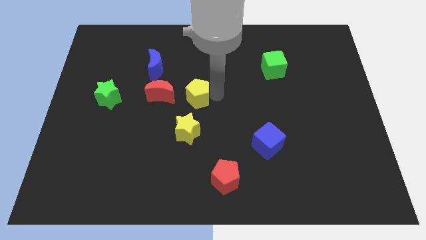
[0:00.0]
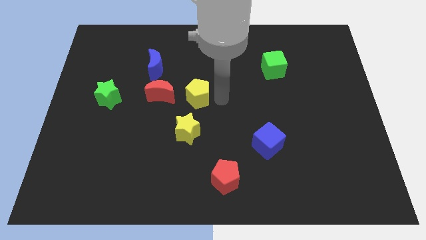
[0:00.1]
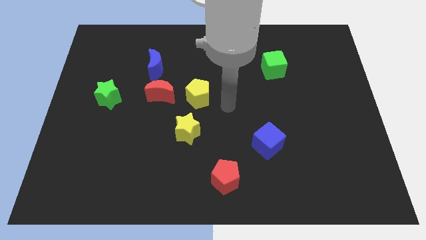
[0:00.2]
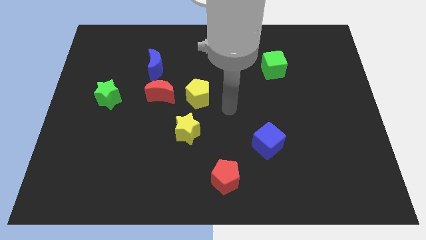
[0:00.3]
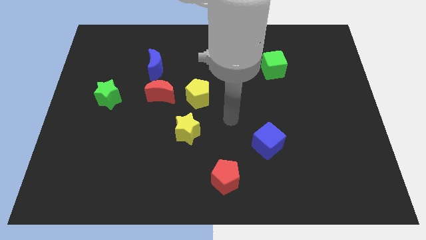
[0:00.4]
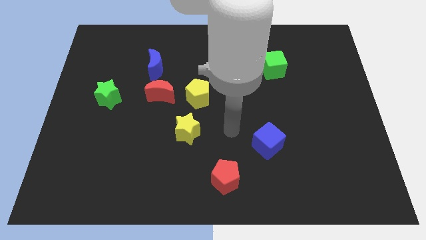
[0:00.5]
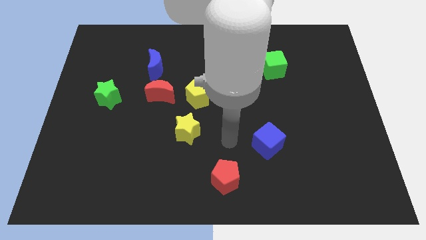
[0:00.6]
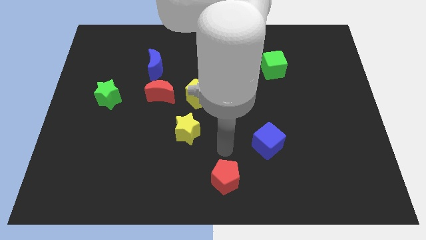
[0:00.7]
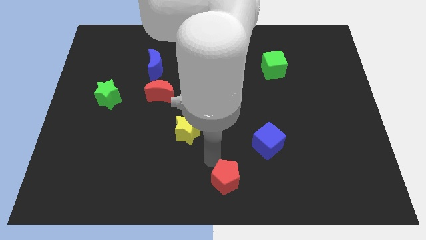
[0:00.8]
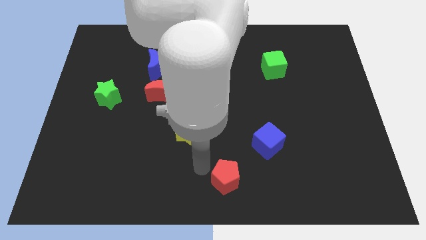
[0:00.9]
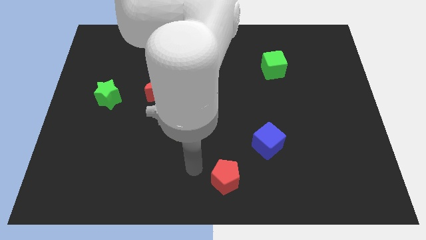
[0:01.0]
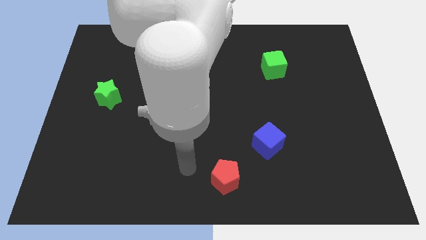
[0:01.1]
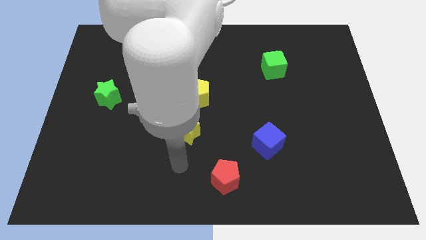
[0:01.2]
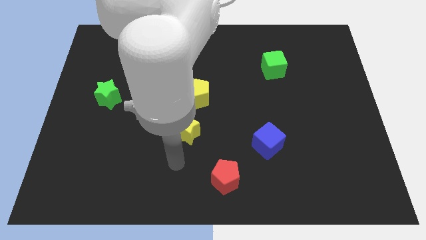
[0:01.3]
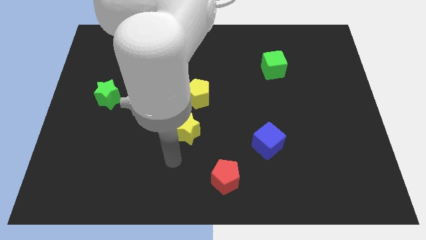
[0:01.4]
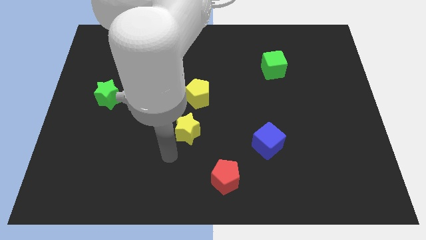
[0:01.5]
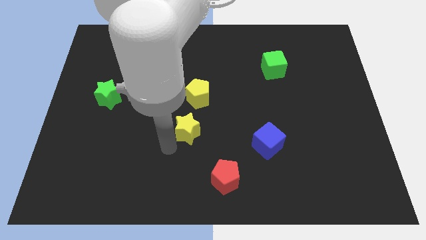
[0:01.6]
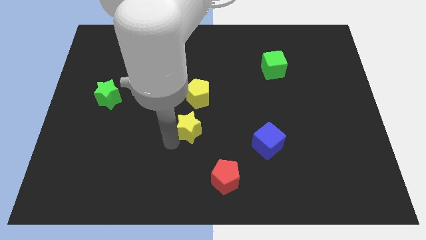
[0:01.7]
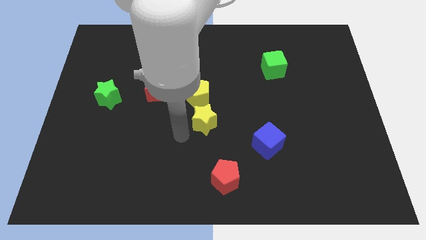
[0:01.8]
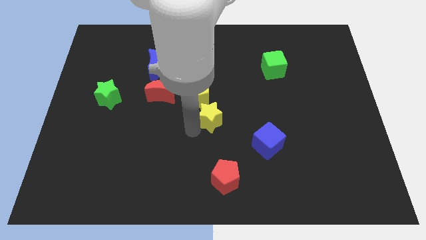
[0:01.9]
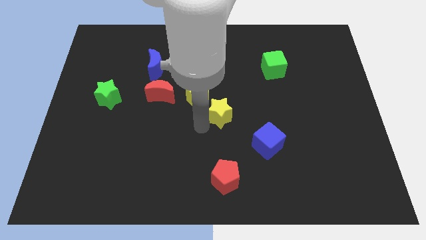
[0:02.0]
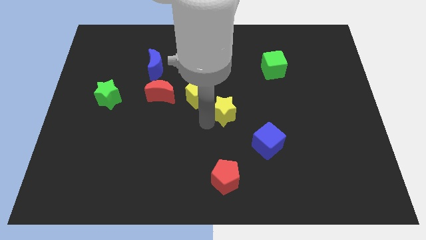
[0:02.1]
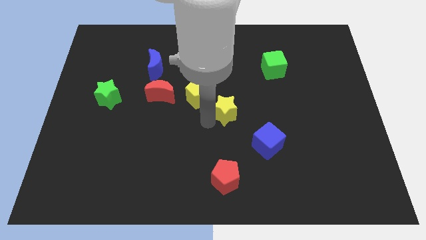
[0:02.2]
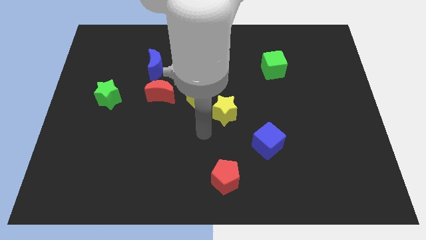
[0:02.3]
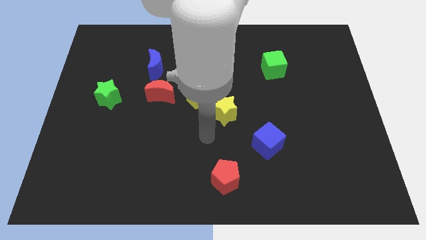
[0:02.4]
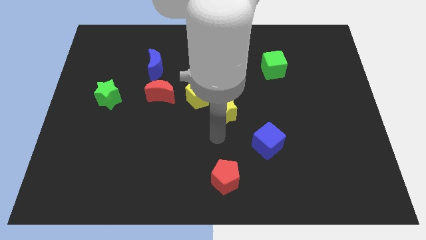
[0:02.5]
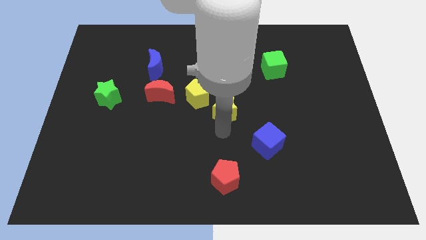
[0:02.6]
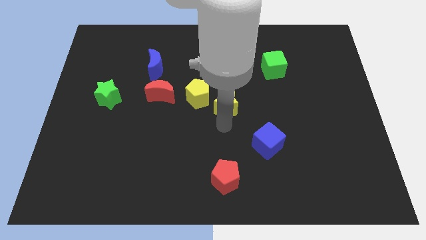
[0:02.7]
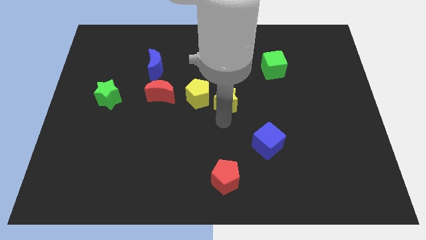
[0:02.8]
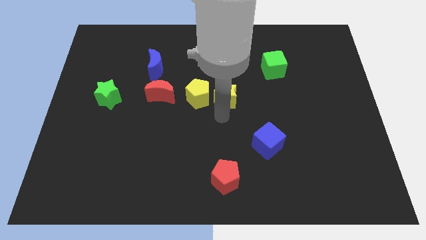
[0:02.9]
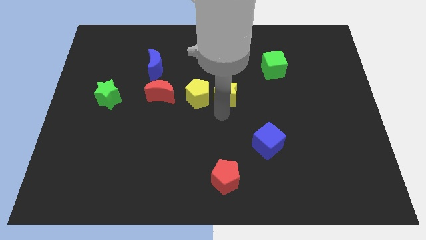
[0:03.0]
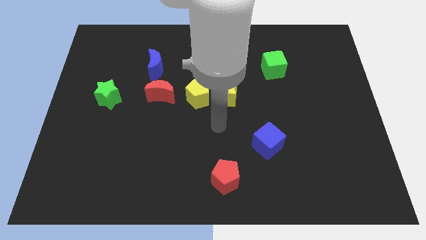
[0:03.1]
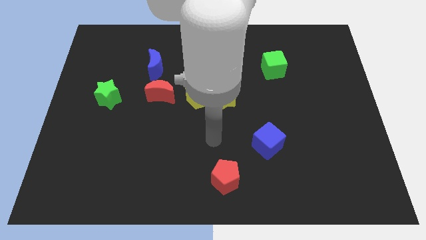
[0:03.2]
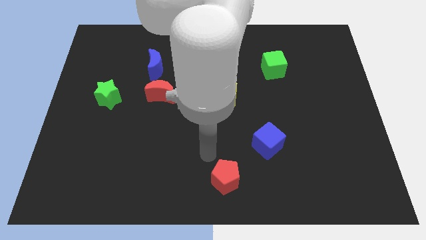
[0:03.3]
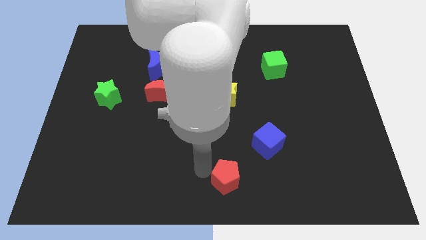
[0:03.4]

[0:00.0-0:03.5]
put the yellow star on the right side of the yellow pentagon

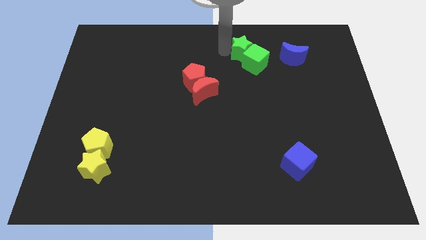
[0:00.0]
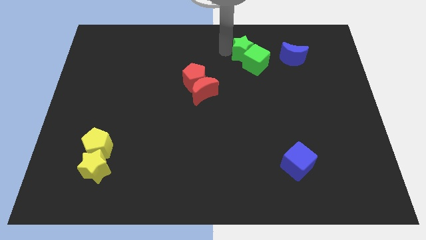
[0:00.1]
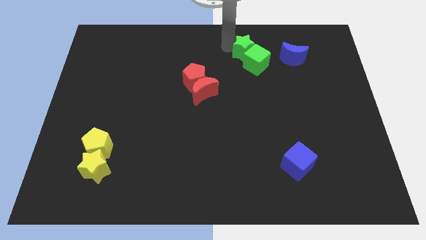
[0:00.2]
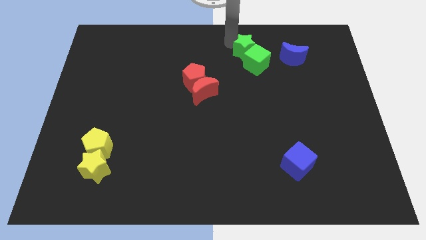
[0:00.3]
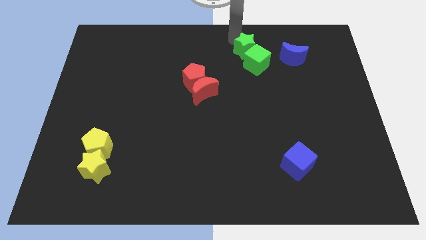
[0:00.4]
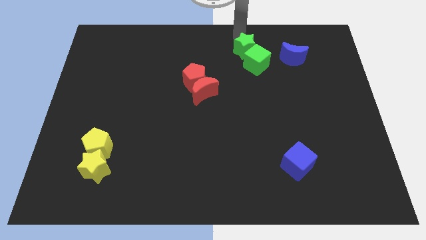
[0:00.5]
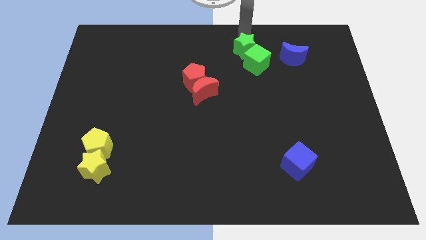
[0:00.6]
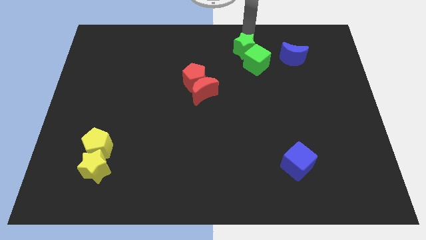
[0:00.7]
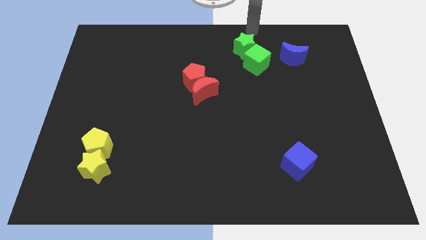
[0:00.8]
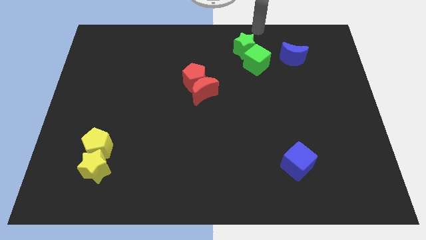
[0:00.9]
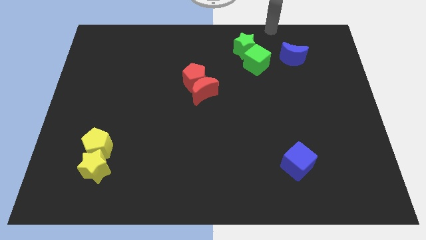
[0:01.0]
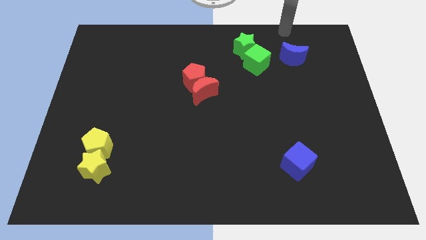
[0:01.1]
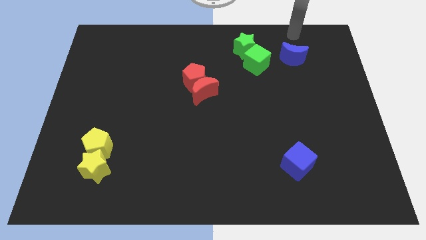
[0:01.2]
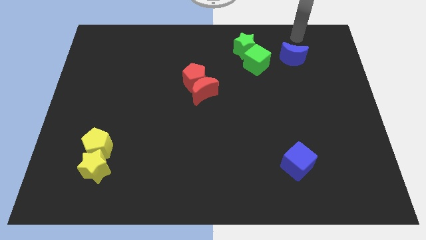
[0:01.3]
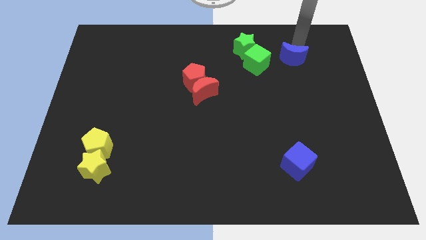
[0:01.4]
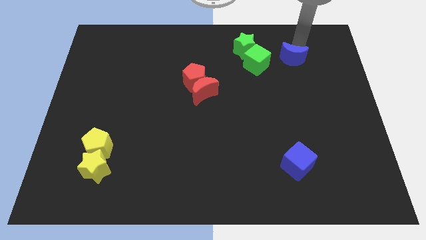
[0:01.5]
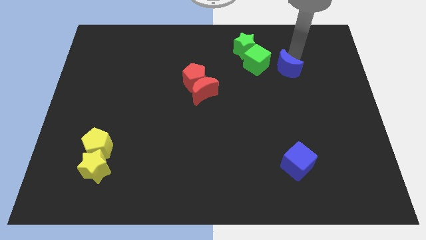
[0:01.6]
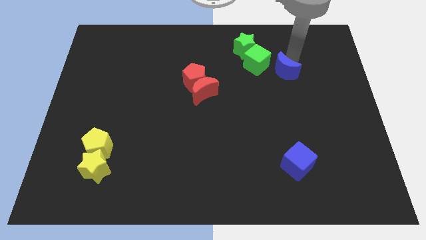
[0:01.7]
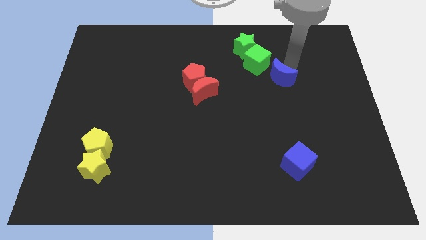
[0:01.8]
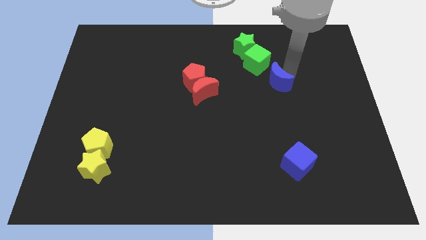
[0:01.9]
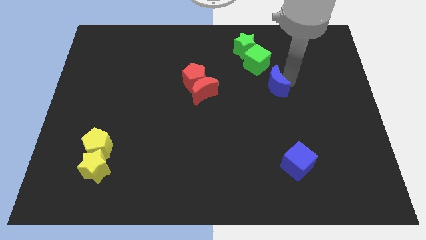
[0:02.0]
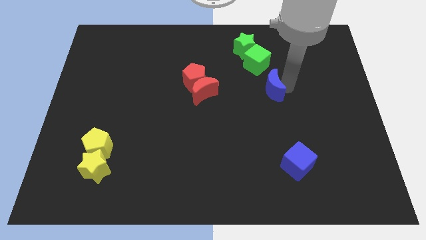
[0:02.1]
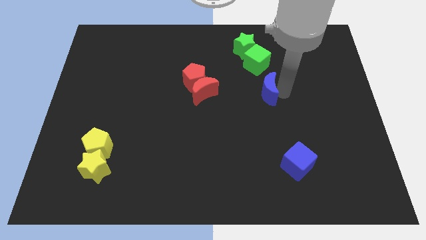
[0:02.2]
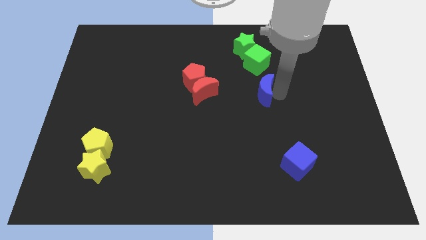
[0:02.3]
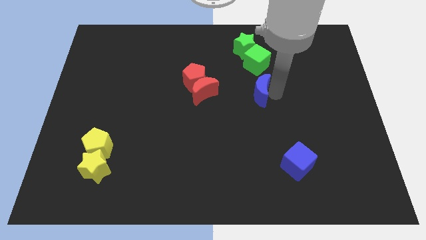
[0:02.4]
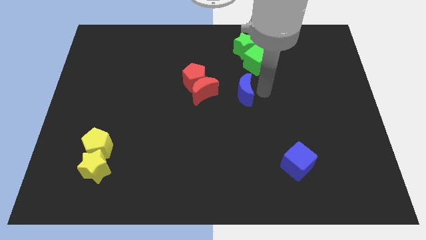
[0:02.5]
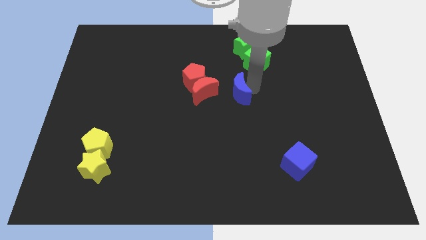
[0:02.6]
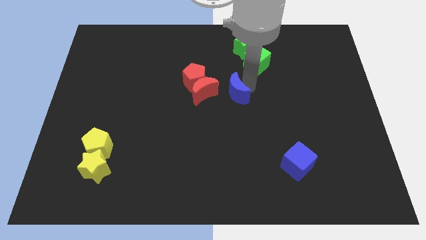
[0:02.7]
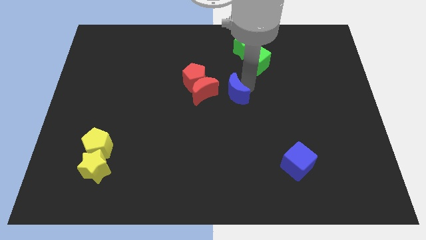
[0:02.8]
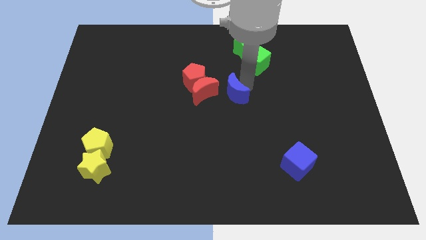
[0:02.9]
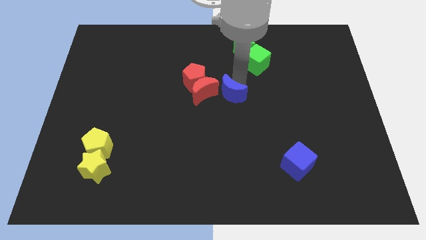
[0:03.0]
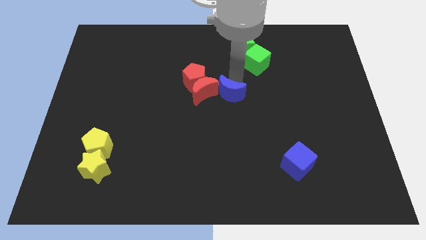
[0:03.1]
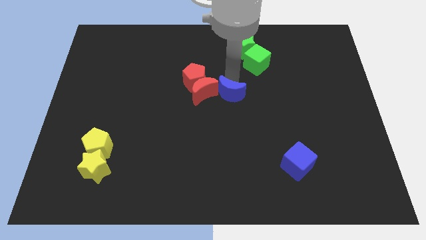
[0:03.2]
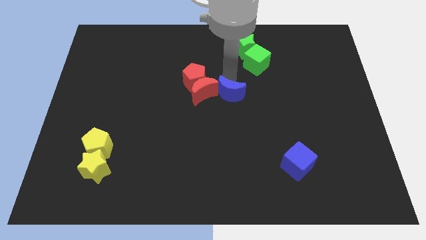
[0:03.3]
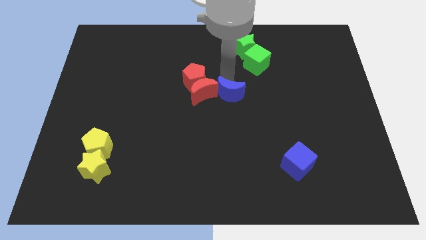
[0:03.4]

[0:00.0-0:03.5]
push the blue crescent close to the red crescent

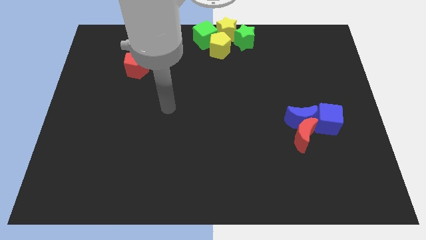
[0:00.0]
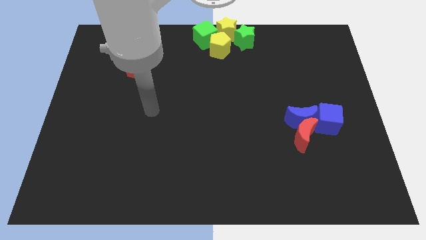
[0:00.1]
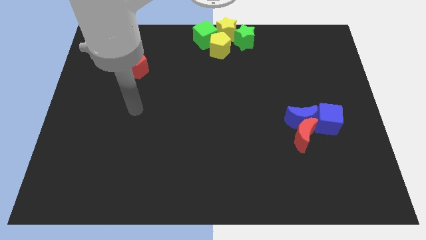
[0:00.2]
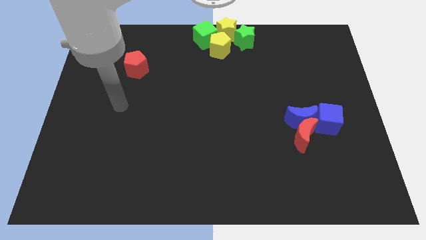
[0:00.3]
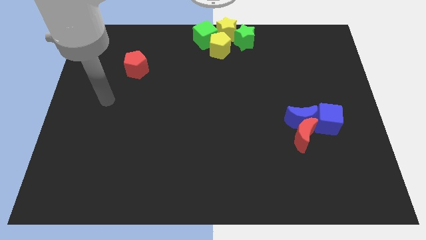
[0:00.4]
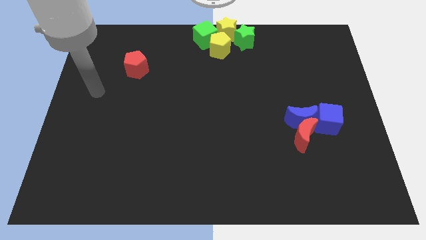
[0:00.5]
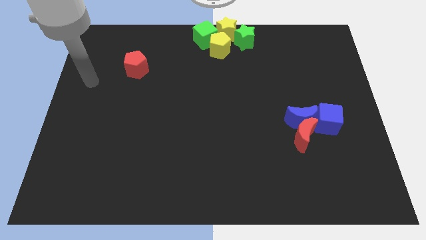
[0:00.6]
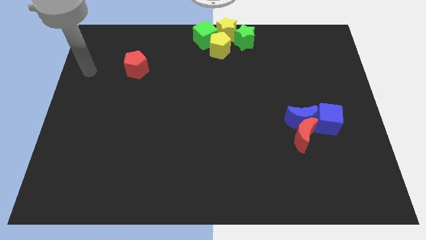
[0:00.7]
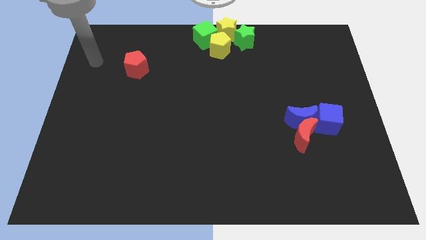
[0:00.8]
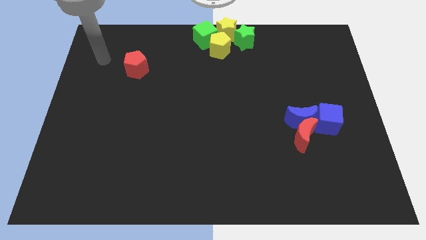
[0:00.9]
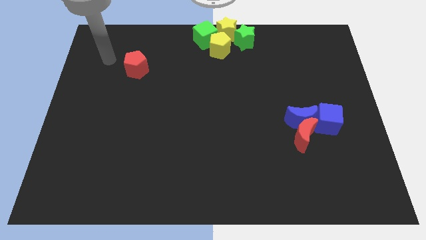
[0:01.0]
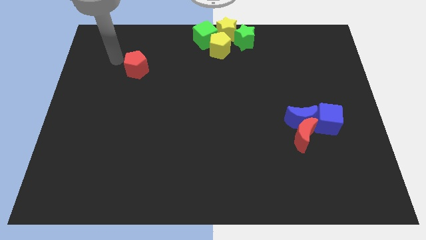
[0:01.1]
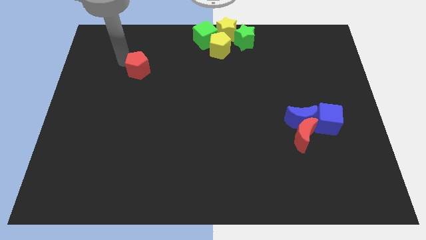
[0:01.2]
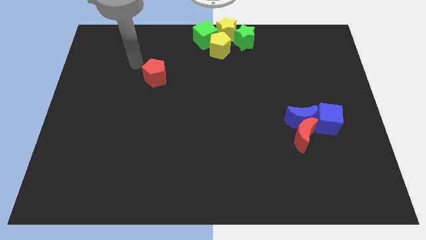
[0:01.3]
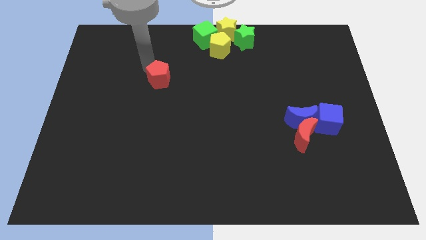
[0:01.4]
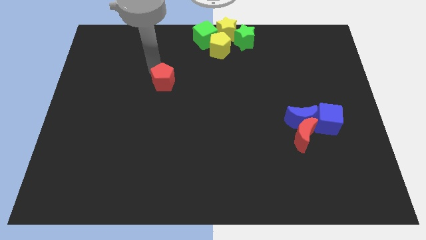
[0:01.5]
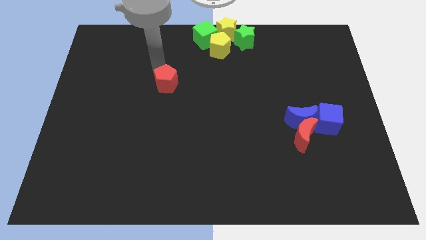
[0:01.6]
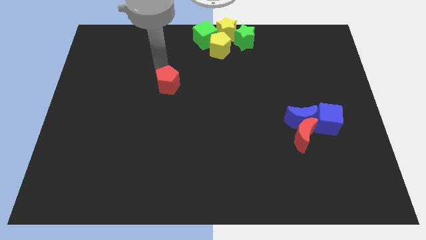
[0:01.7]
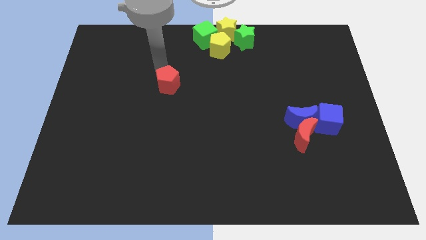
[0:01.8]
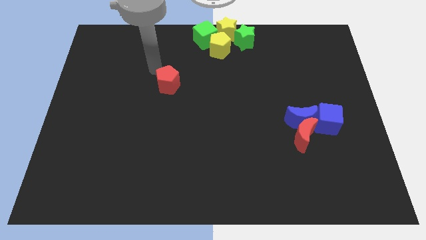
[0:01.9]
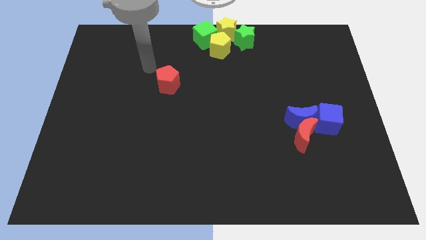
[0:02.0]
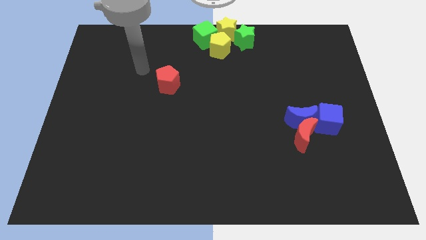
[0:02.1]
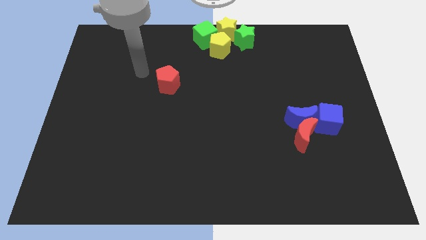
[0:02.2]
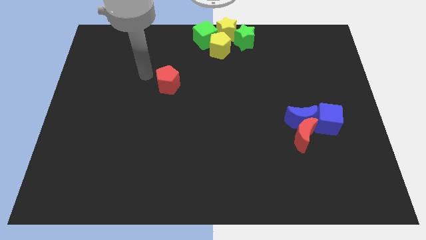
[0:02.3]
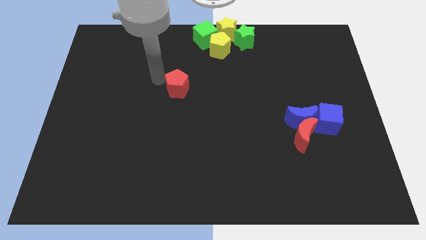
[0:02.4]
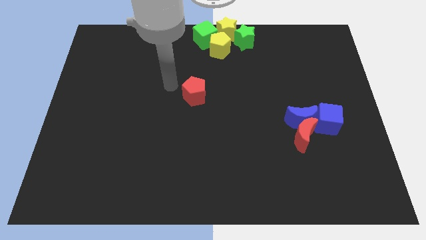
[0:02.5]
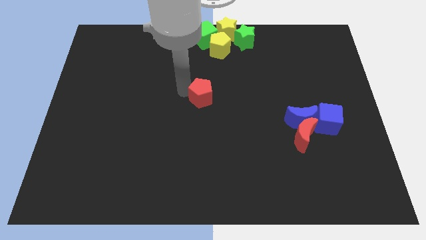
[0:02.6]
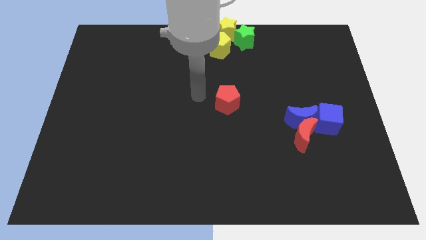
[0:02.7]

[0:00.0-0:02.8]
place the red pentagon at the center of the board
